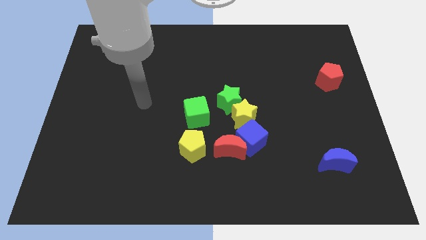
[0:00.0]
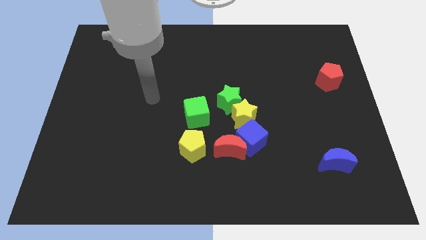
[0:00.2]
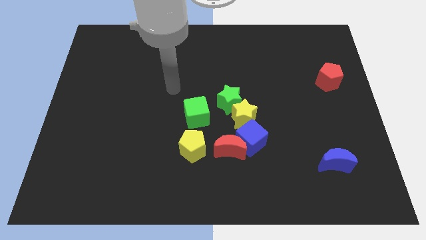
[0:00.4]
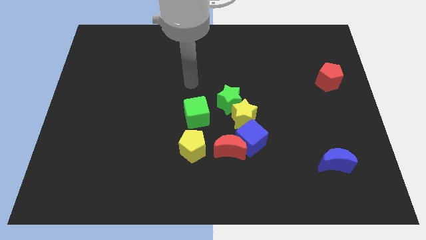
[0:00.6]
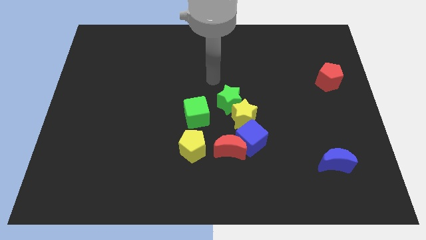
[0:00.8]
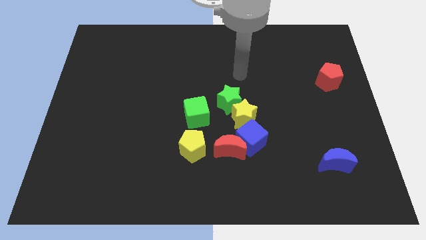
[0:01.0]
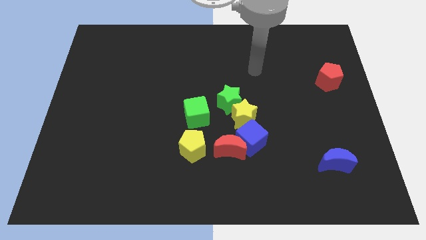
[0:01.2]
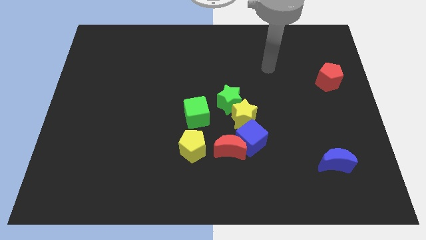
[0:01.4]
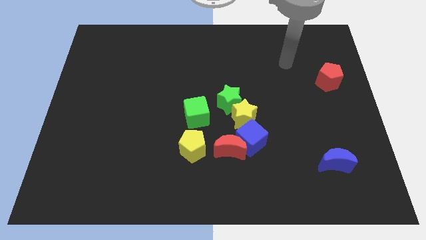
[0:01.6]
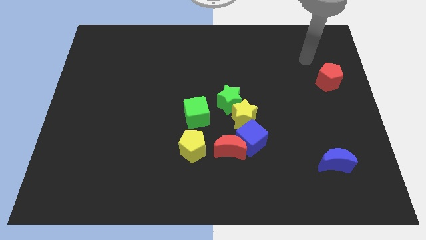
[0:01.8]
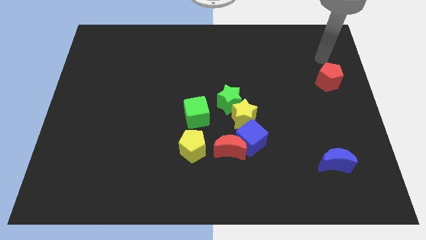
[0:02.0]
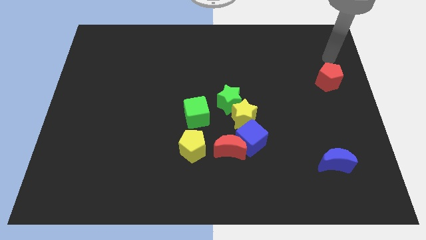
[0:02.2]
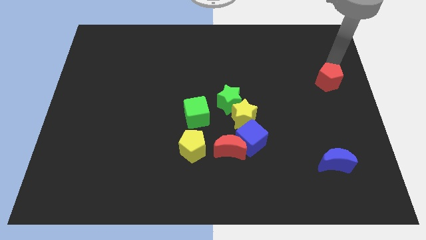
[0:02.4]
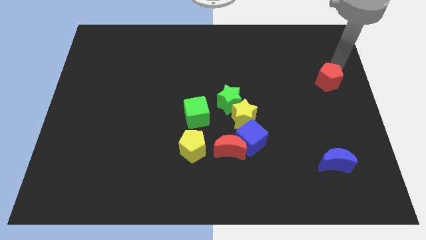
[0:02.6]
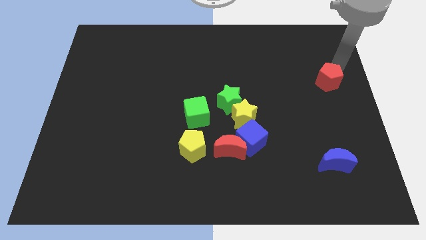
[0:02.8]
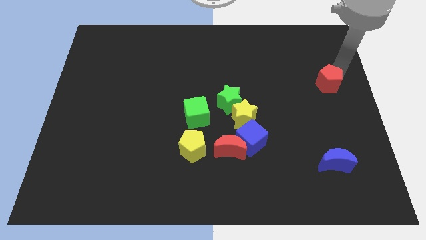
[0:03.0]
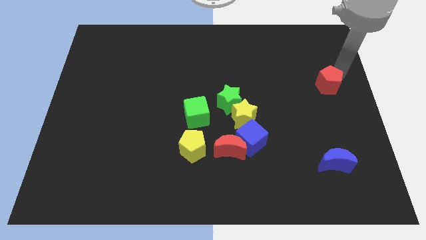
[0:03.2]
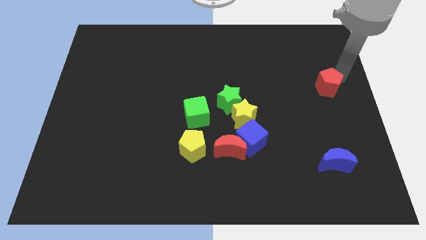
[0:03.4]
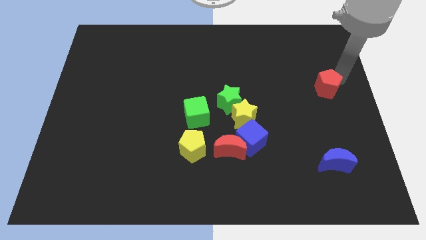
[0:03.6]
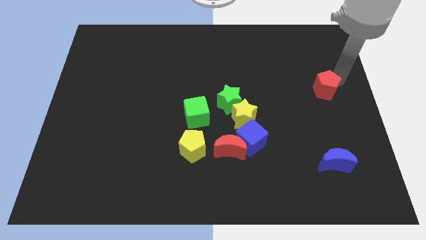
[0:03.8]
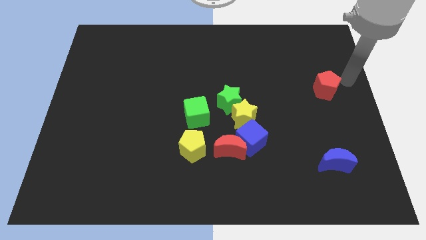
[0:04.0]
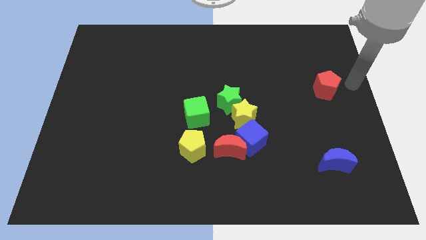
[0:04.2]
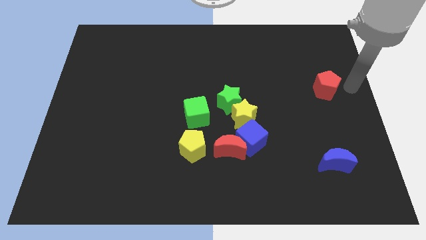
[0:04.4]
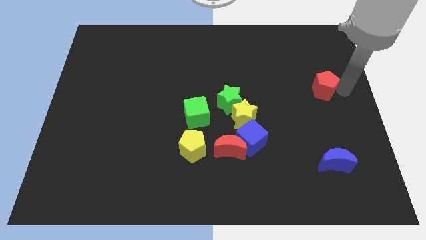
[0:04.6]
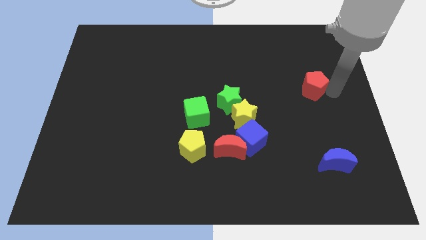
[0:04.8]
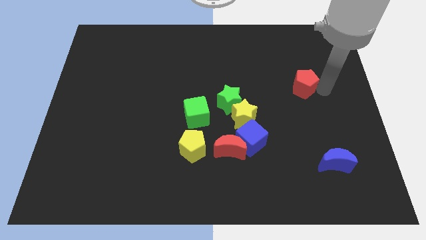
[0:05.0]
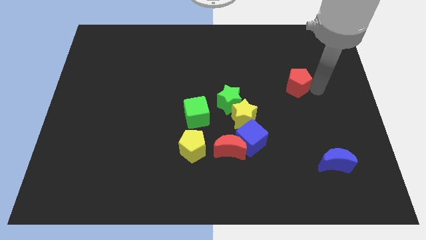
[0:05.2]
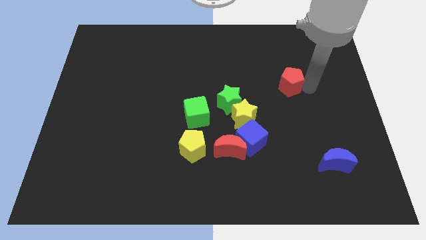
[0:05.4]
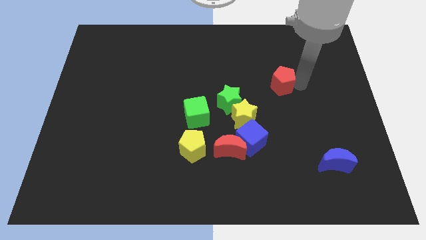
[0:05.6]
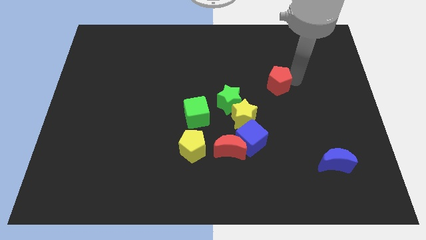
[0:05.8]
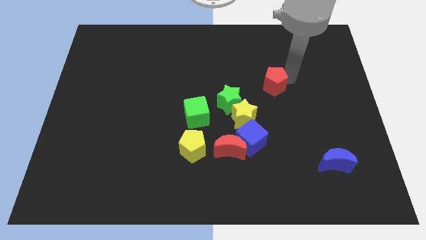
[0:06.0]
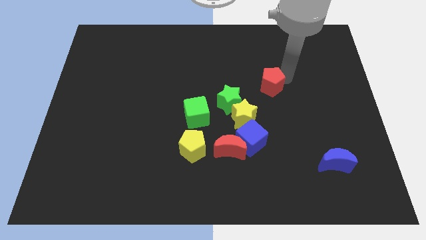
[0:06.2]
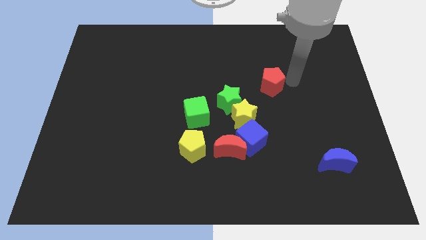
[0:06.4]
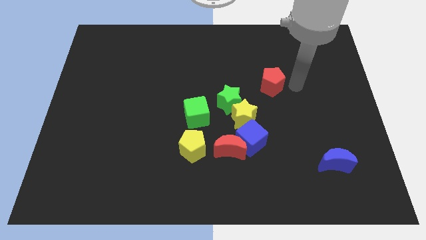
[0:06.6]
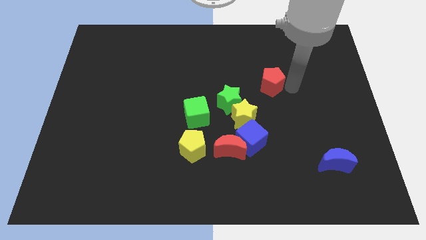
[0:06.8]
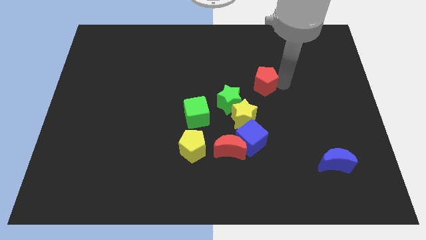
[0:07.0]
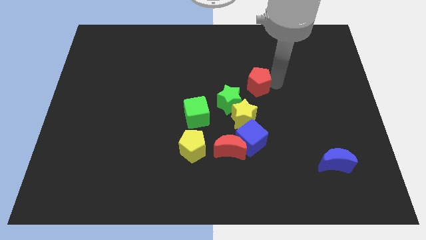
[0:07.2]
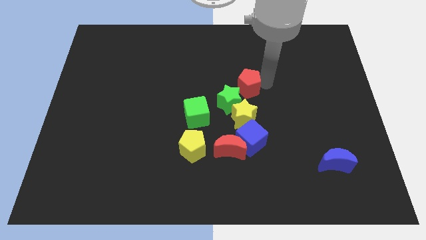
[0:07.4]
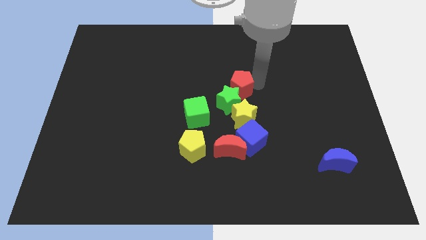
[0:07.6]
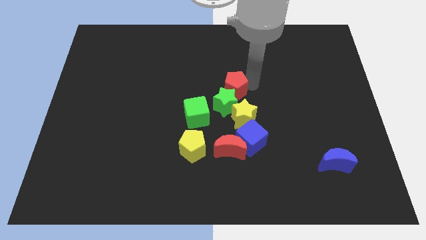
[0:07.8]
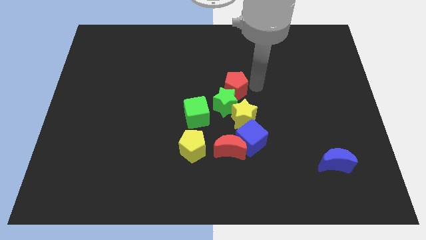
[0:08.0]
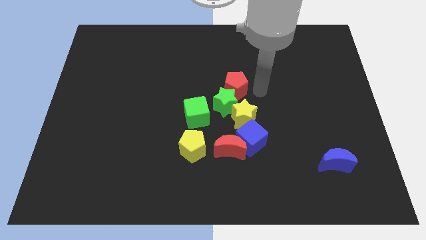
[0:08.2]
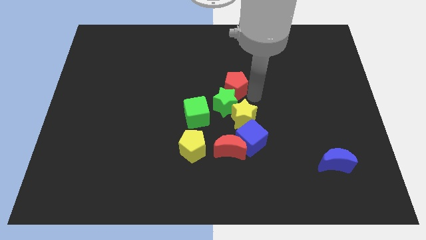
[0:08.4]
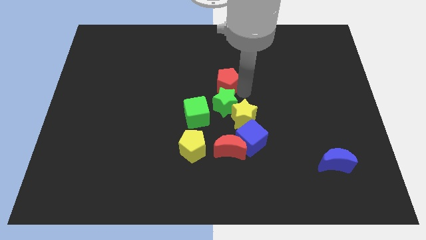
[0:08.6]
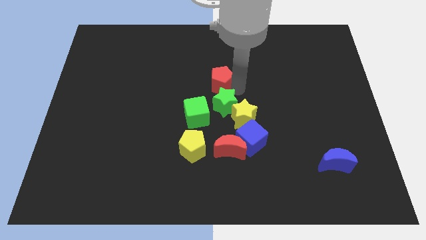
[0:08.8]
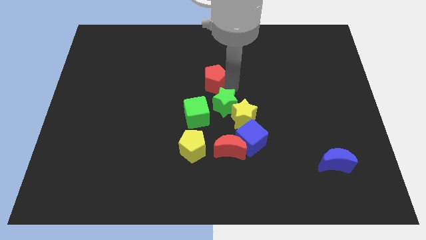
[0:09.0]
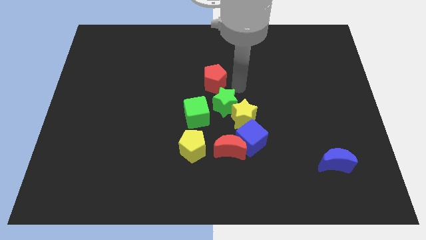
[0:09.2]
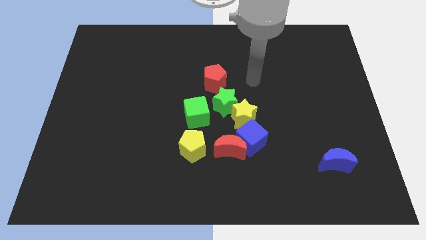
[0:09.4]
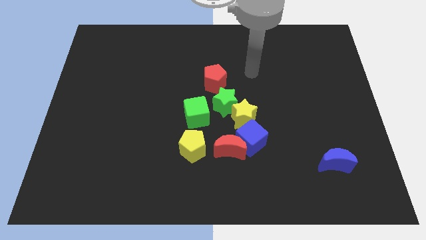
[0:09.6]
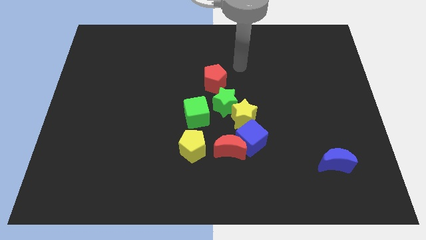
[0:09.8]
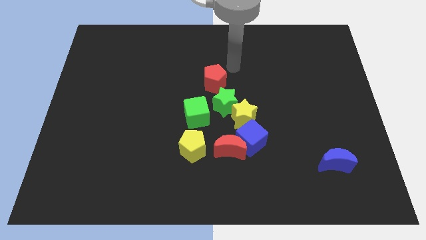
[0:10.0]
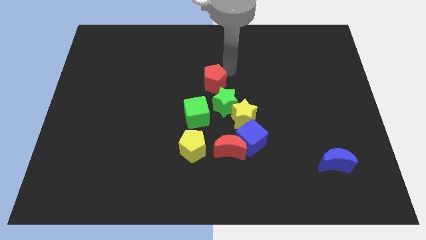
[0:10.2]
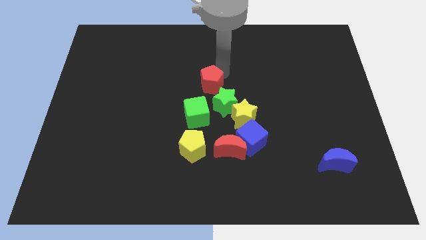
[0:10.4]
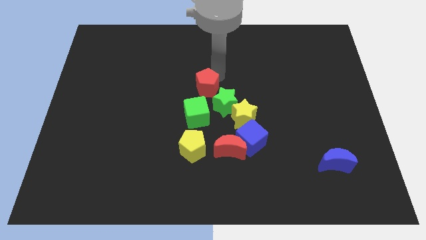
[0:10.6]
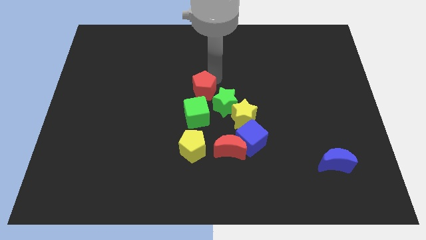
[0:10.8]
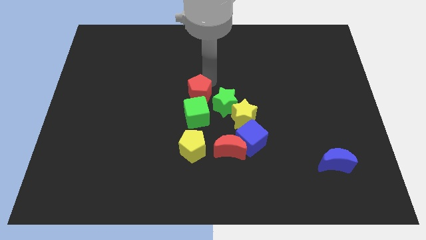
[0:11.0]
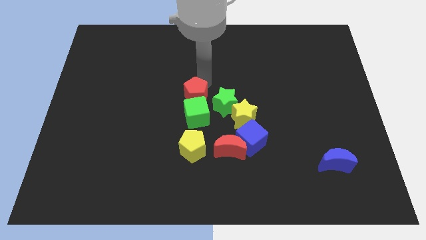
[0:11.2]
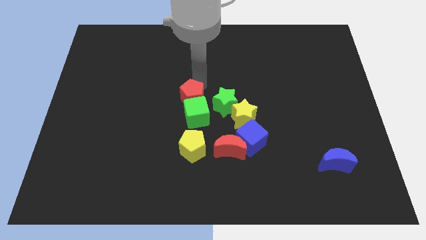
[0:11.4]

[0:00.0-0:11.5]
put the red pentagon close to the green cube

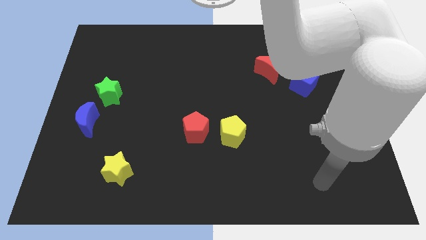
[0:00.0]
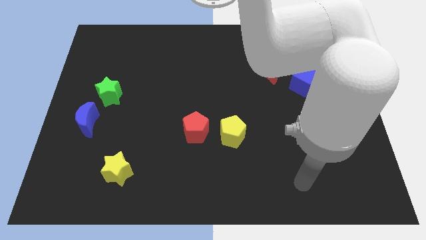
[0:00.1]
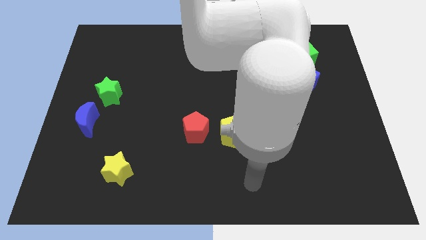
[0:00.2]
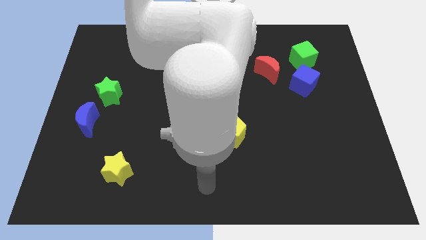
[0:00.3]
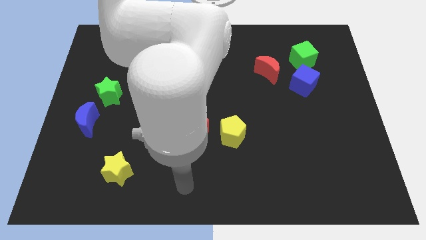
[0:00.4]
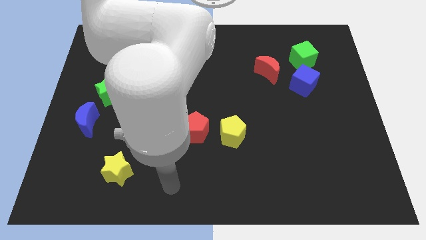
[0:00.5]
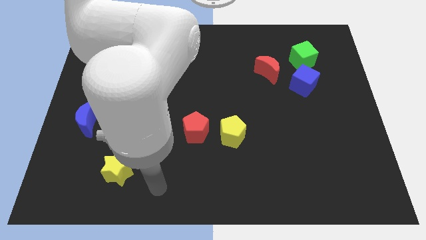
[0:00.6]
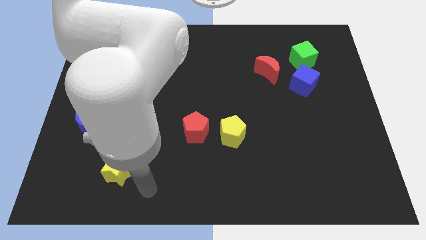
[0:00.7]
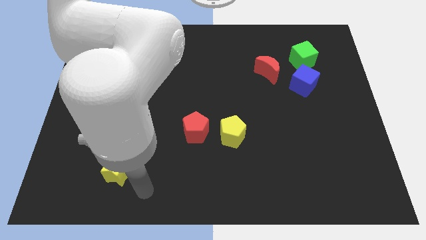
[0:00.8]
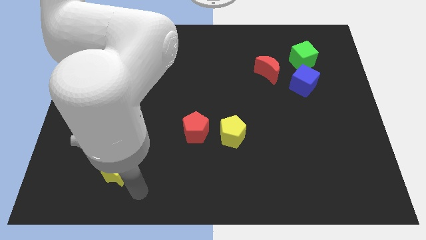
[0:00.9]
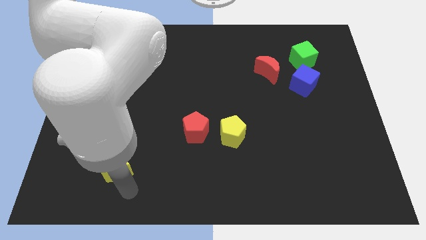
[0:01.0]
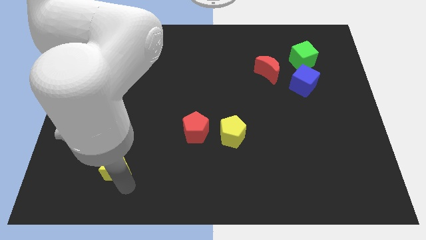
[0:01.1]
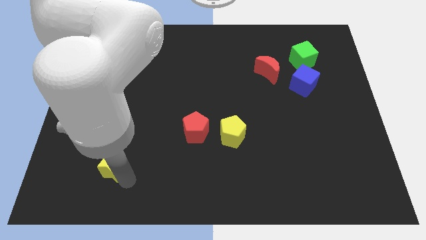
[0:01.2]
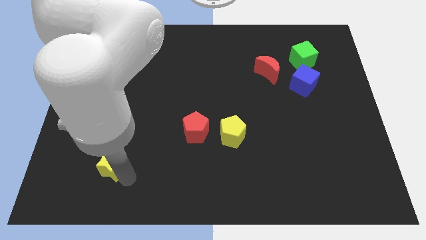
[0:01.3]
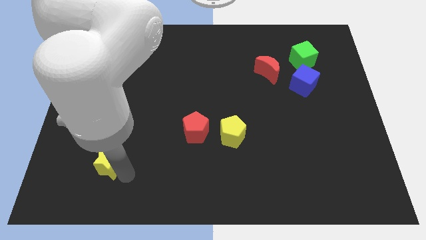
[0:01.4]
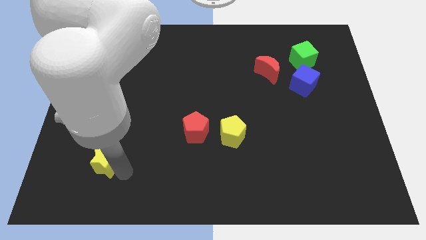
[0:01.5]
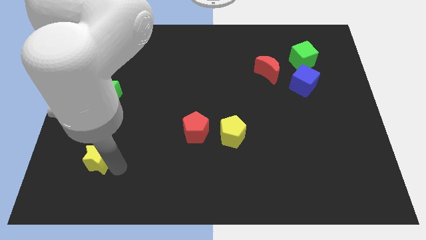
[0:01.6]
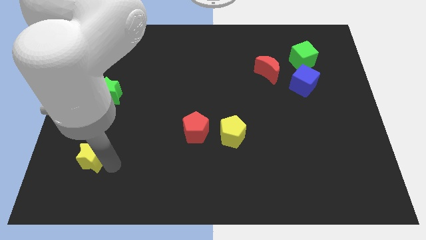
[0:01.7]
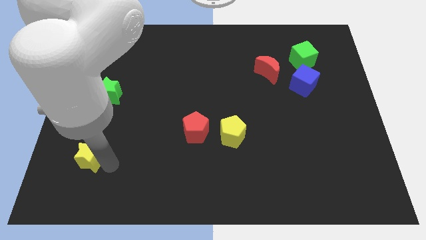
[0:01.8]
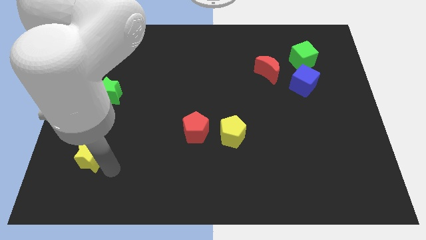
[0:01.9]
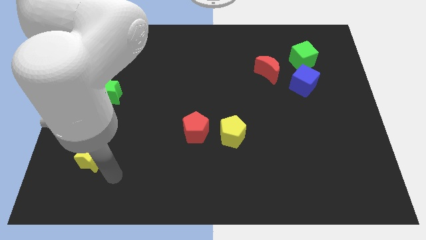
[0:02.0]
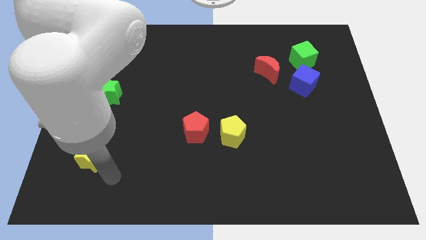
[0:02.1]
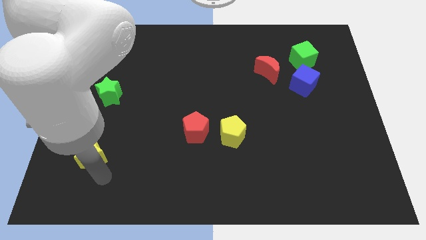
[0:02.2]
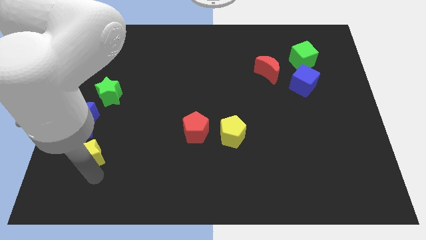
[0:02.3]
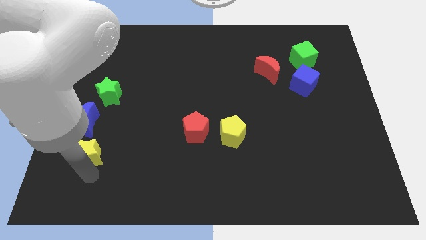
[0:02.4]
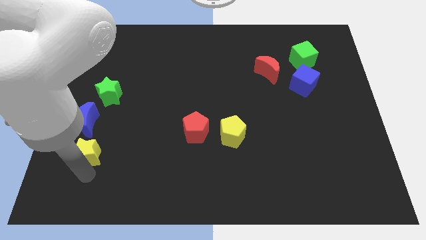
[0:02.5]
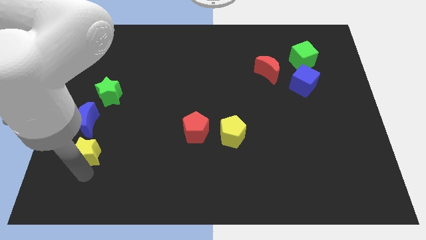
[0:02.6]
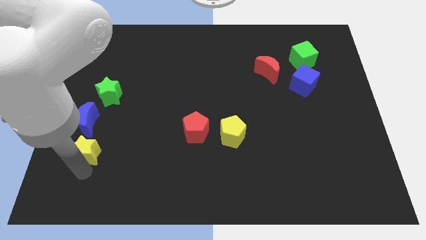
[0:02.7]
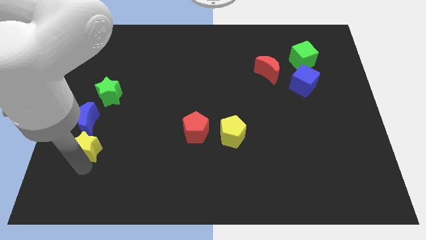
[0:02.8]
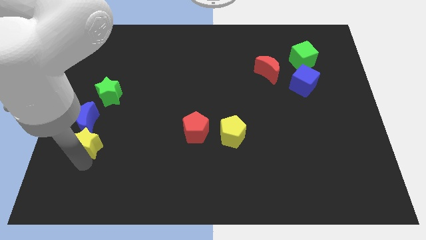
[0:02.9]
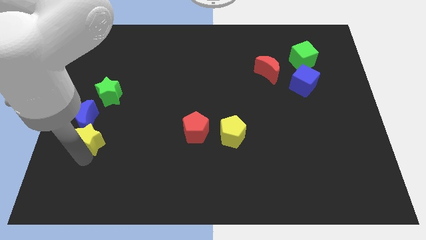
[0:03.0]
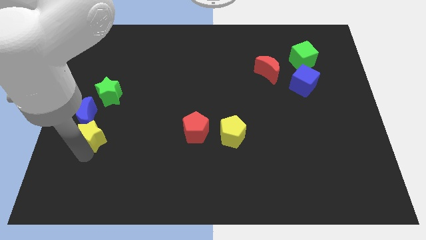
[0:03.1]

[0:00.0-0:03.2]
slide the yellow star next to the blue moon
